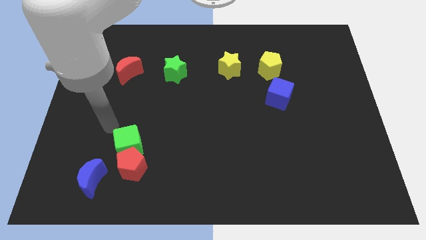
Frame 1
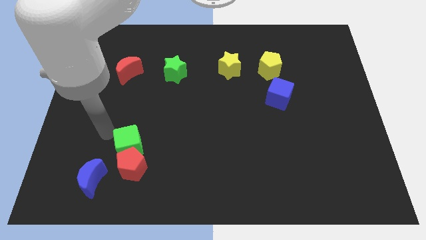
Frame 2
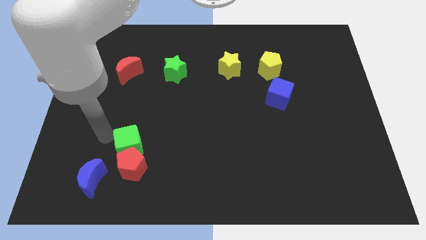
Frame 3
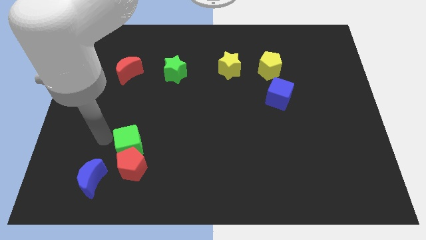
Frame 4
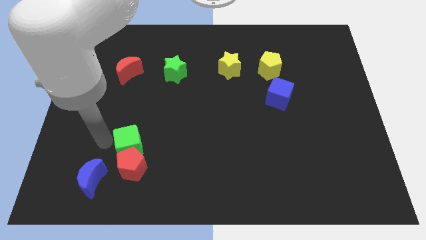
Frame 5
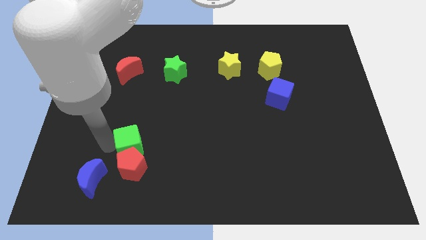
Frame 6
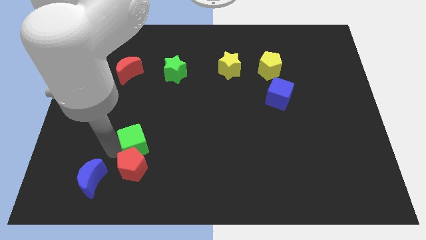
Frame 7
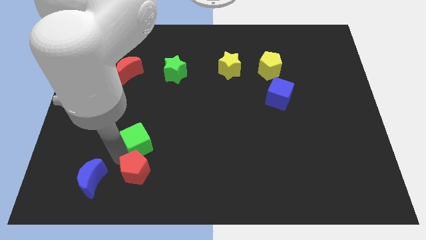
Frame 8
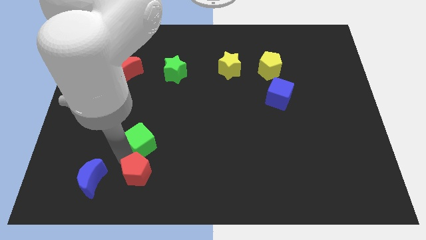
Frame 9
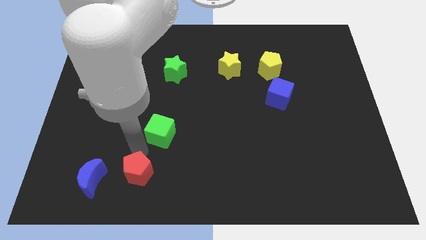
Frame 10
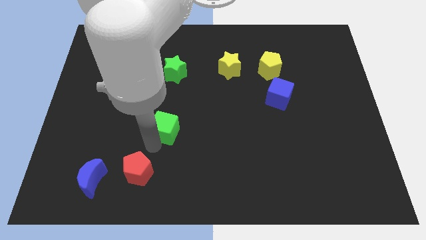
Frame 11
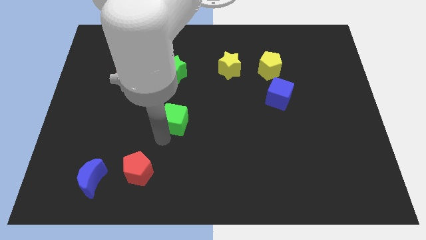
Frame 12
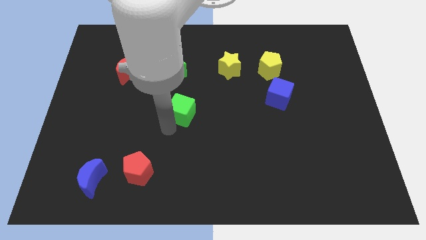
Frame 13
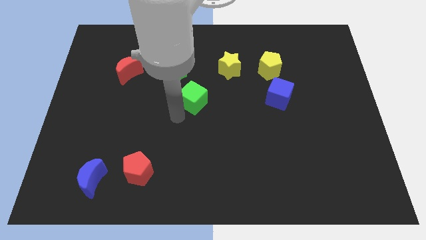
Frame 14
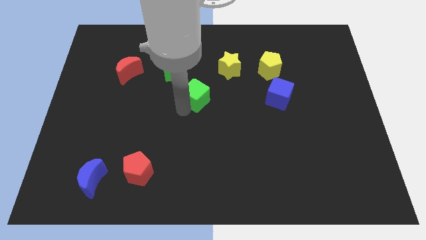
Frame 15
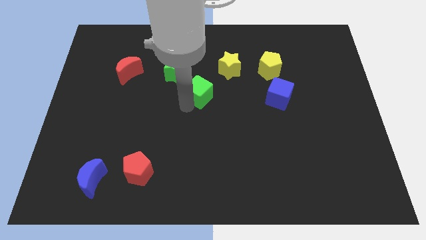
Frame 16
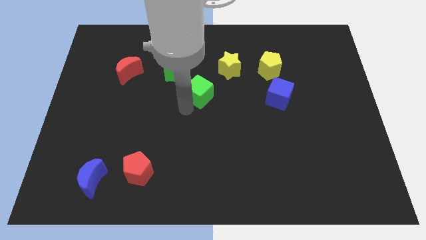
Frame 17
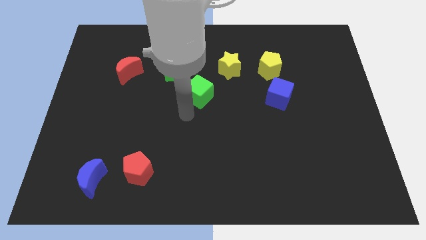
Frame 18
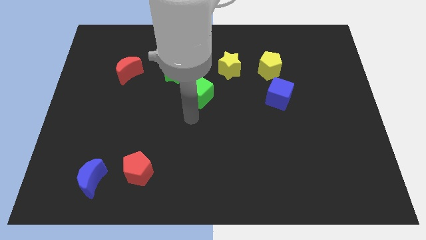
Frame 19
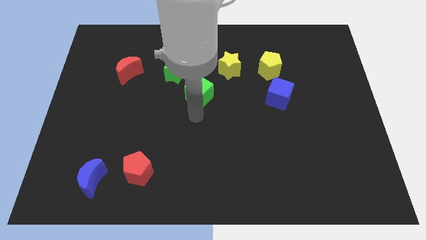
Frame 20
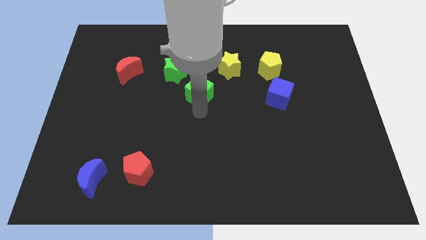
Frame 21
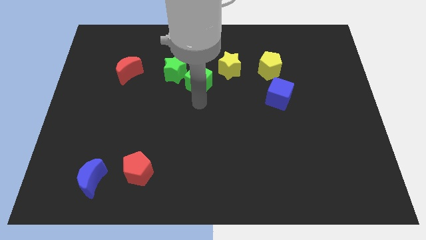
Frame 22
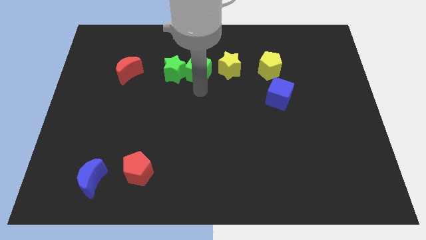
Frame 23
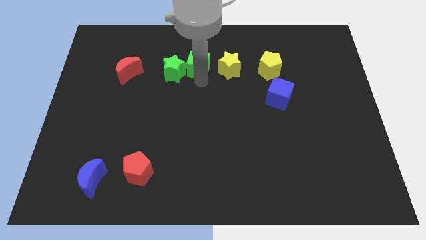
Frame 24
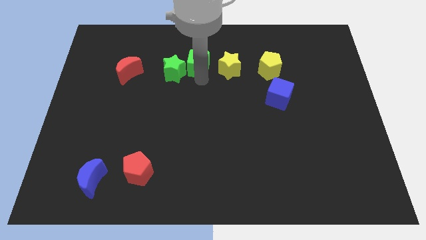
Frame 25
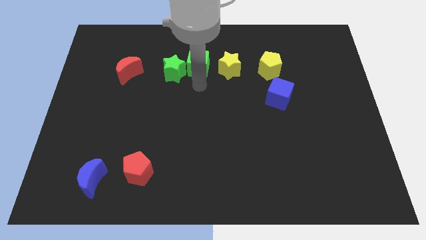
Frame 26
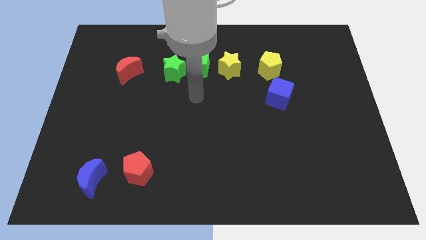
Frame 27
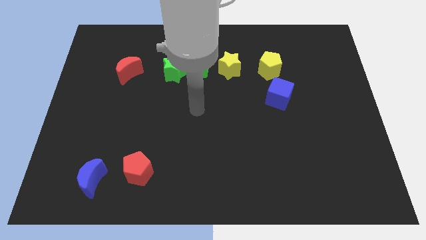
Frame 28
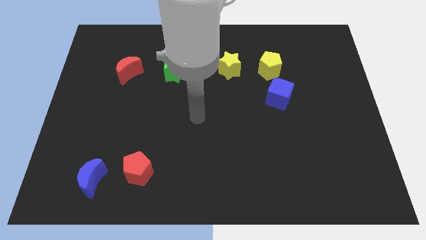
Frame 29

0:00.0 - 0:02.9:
push green cube diagonally upwards

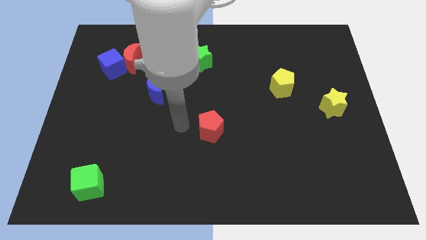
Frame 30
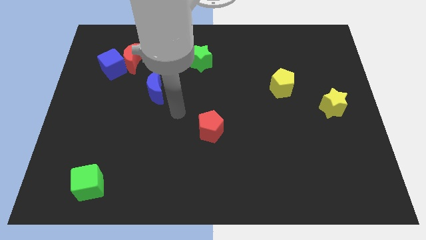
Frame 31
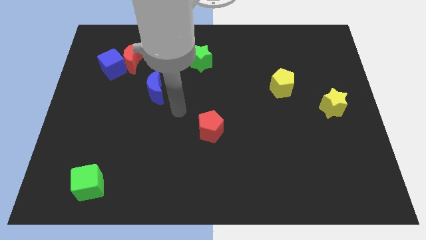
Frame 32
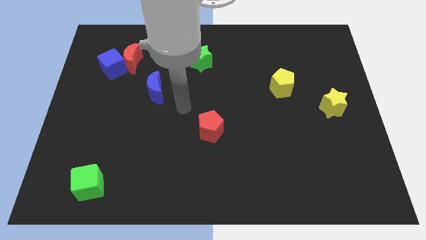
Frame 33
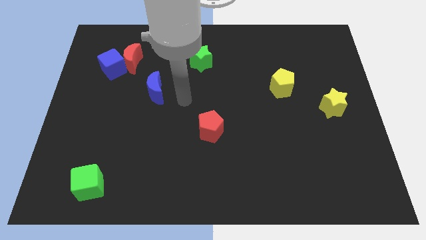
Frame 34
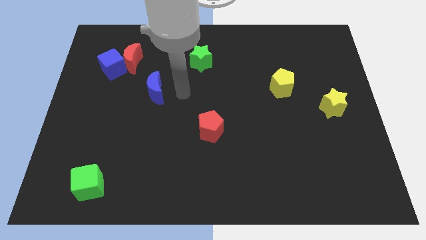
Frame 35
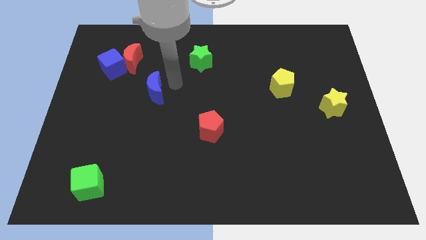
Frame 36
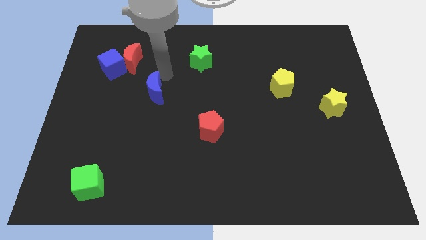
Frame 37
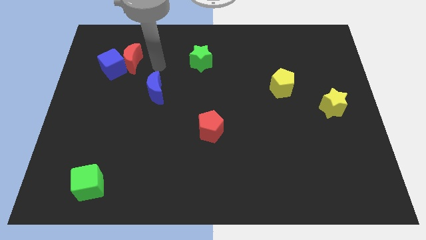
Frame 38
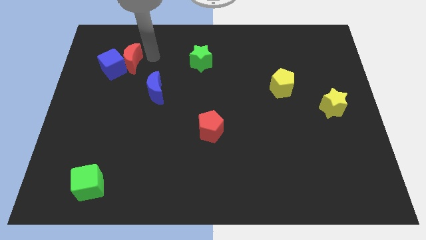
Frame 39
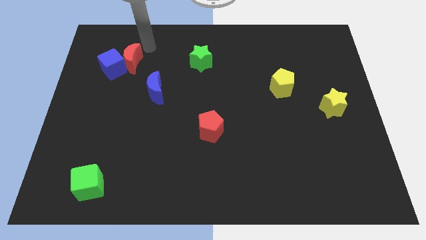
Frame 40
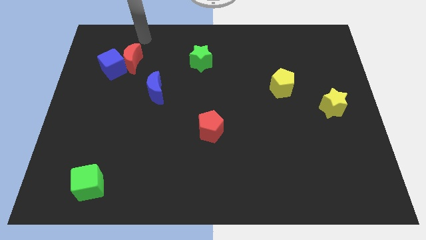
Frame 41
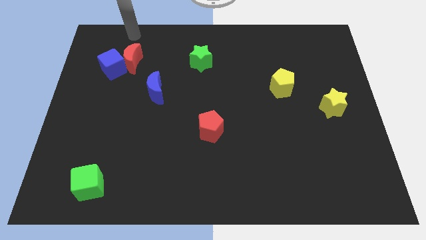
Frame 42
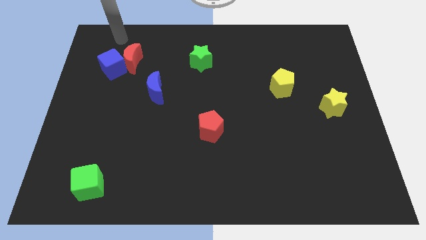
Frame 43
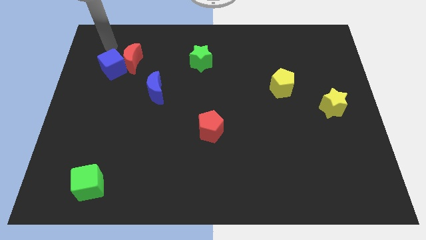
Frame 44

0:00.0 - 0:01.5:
move your arm towards the blue cube

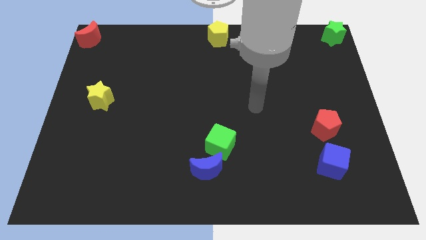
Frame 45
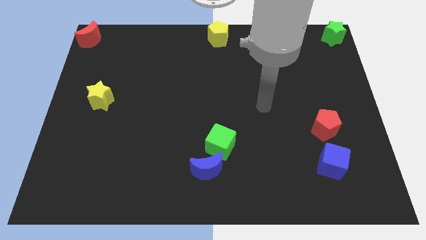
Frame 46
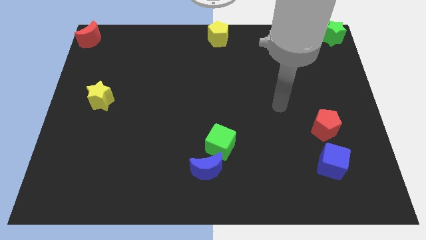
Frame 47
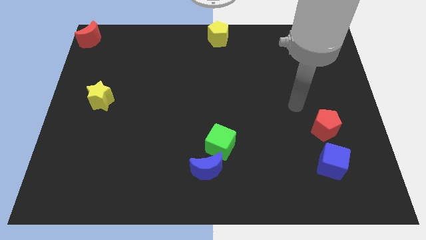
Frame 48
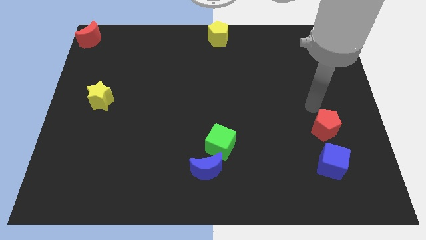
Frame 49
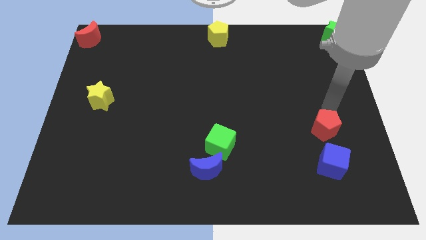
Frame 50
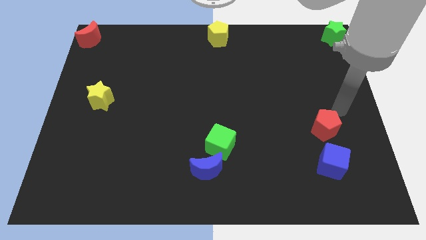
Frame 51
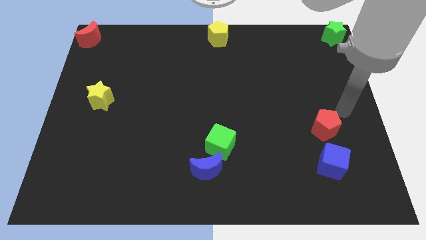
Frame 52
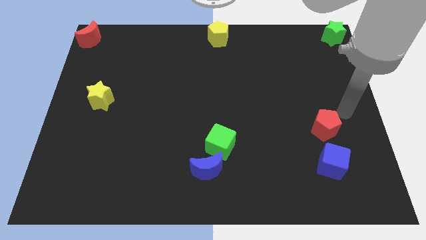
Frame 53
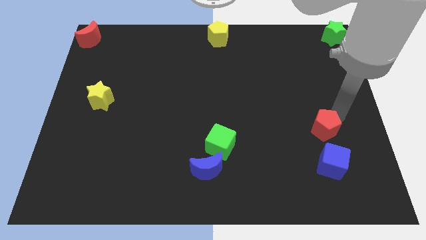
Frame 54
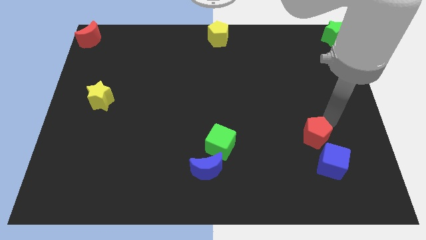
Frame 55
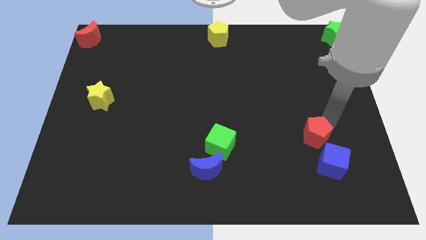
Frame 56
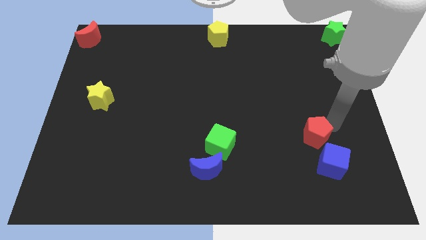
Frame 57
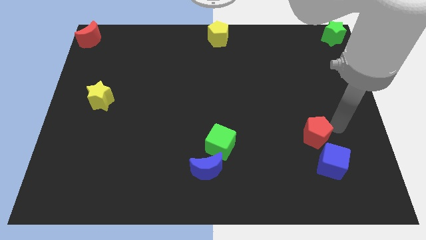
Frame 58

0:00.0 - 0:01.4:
place the red pentagon to the top left of blue cube

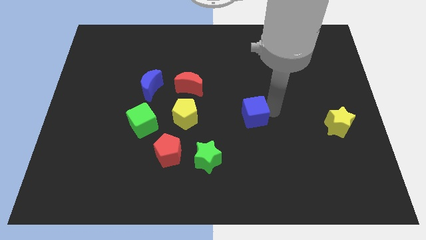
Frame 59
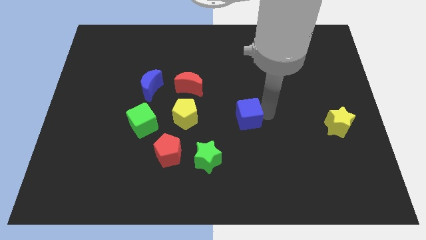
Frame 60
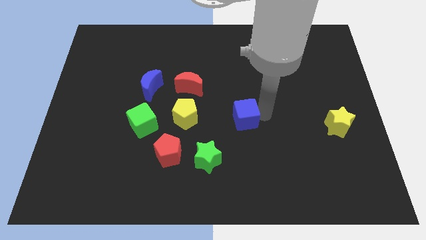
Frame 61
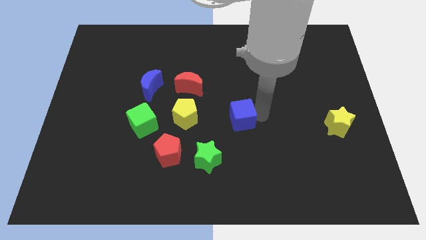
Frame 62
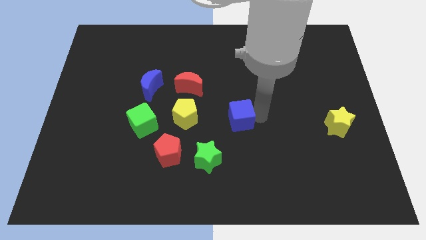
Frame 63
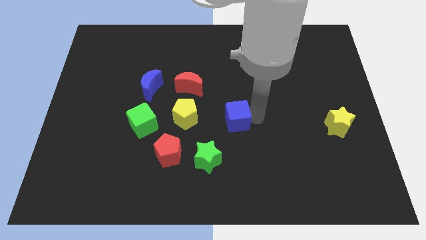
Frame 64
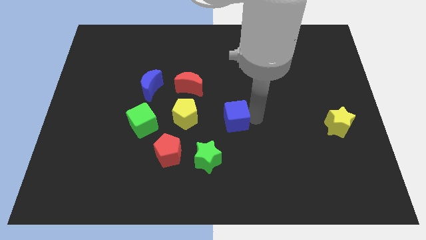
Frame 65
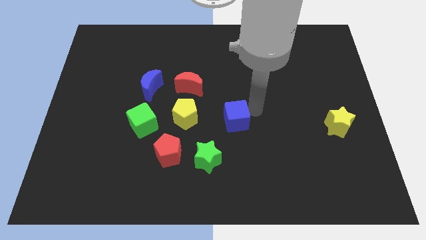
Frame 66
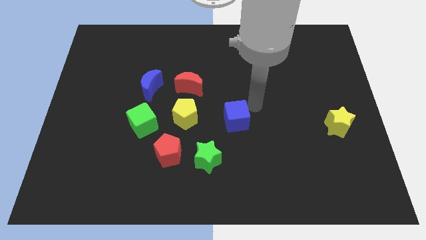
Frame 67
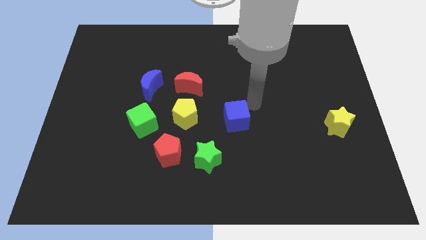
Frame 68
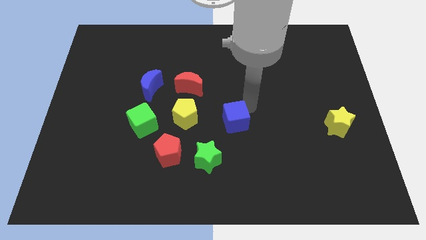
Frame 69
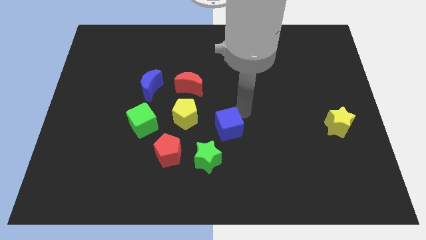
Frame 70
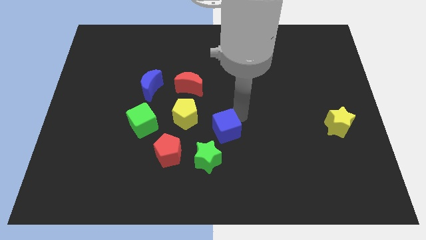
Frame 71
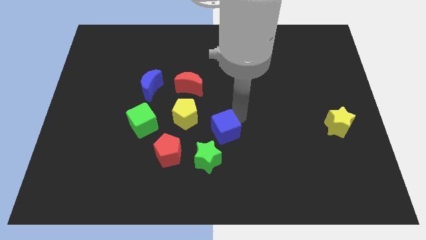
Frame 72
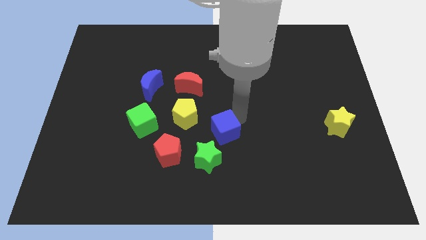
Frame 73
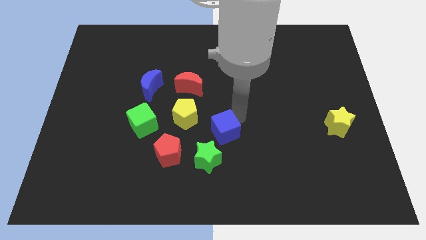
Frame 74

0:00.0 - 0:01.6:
slide the blue cube slightly towards the green star

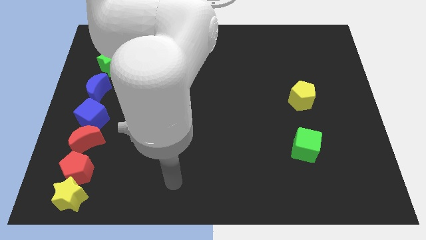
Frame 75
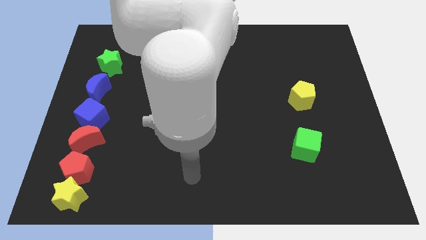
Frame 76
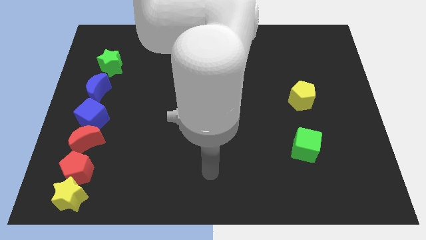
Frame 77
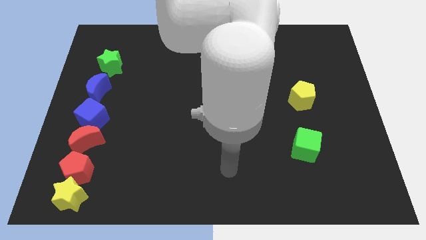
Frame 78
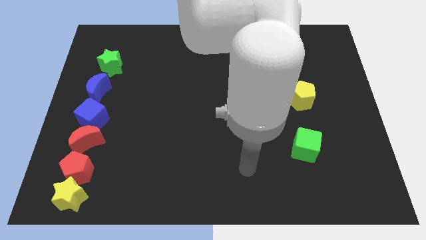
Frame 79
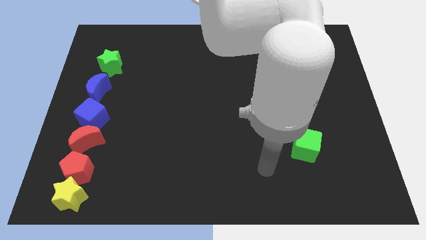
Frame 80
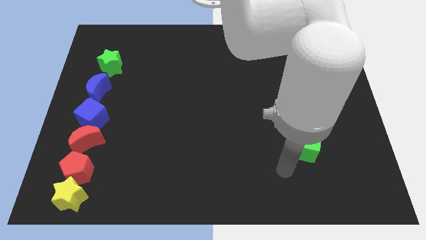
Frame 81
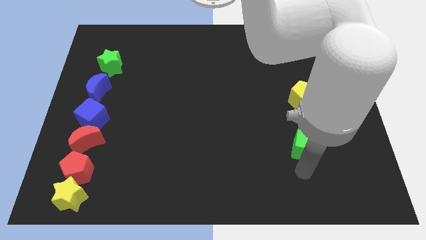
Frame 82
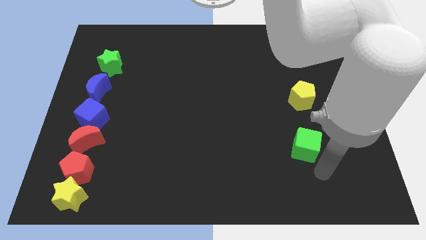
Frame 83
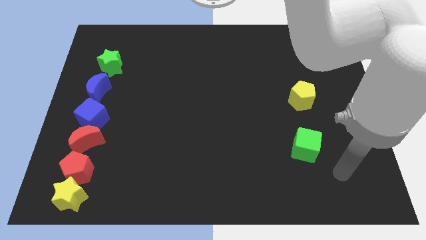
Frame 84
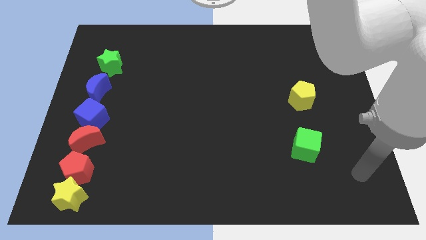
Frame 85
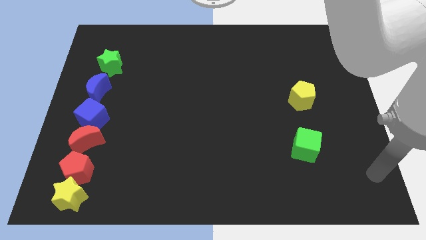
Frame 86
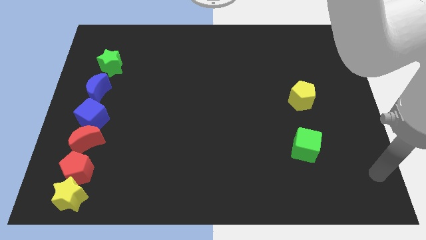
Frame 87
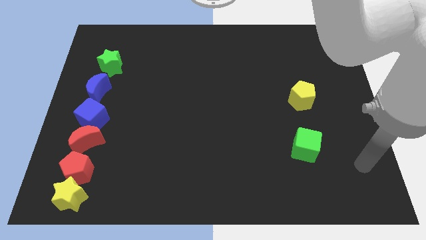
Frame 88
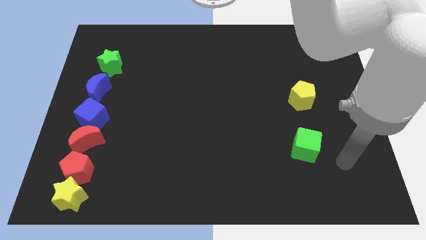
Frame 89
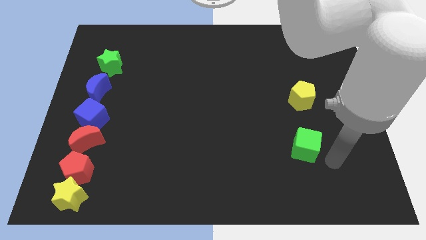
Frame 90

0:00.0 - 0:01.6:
point your arm at the right side of the green cube
